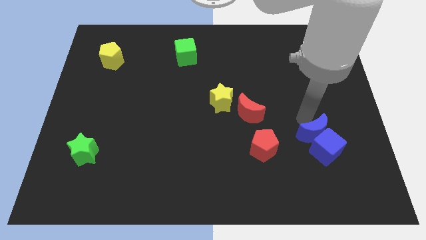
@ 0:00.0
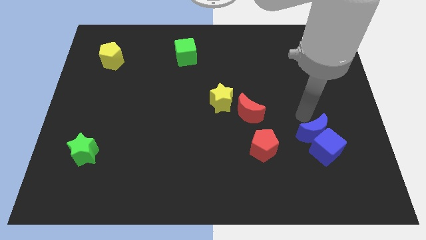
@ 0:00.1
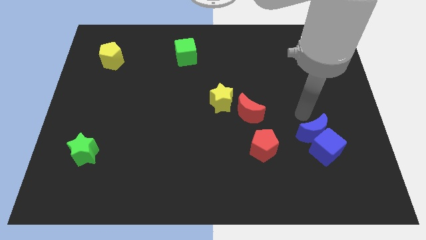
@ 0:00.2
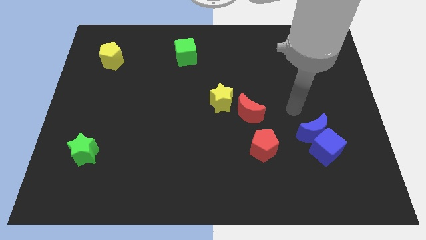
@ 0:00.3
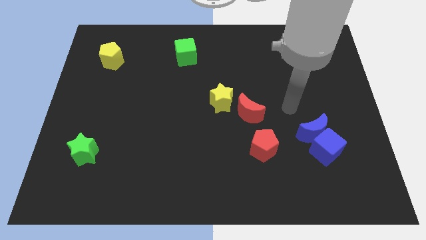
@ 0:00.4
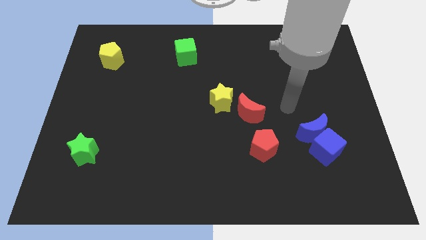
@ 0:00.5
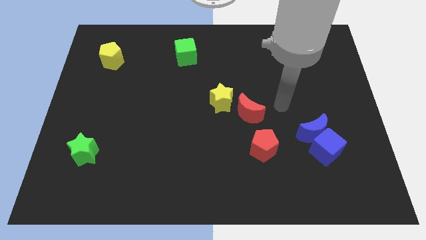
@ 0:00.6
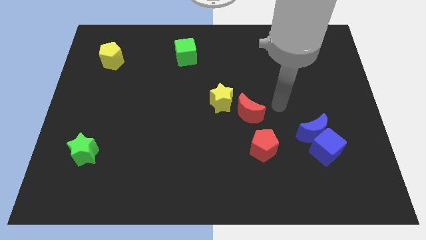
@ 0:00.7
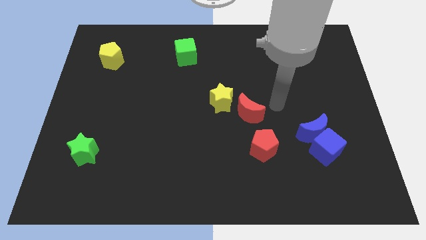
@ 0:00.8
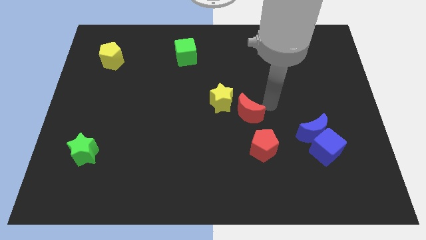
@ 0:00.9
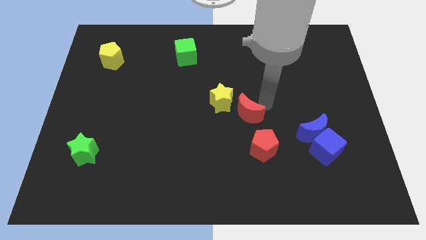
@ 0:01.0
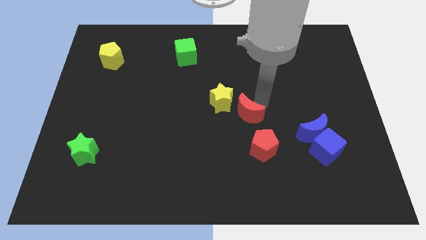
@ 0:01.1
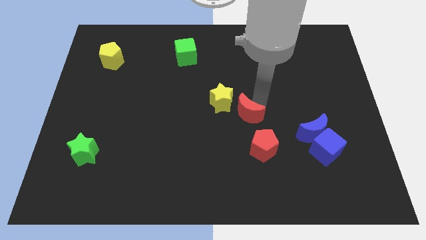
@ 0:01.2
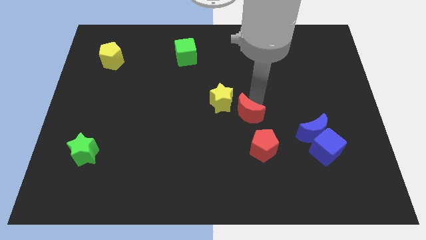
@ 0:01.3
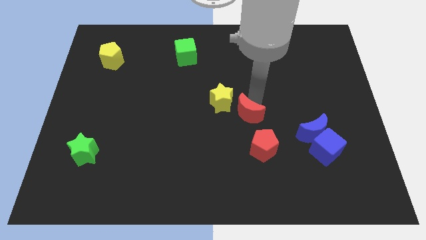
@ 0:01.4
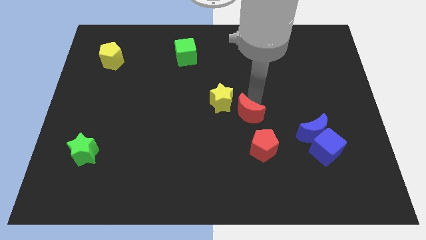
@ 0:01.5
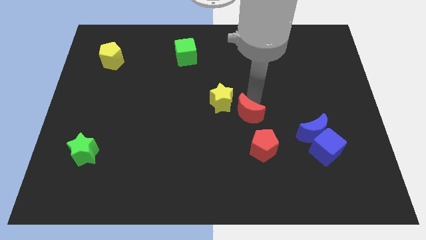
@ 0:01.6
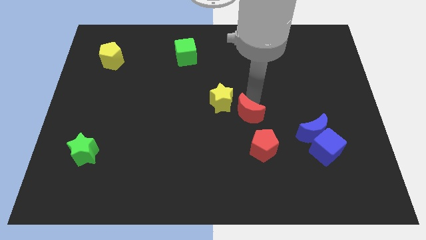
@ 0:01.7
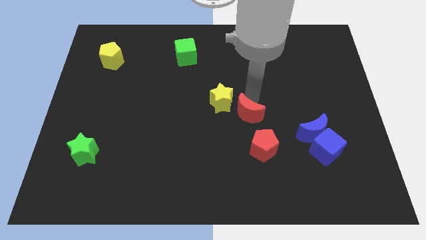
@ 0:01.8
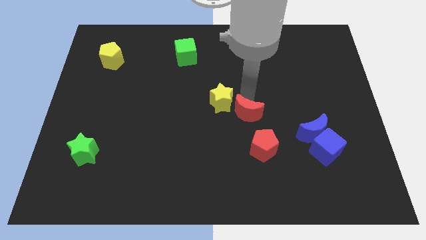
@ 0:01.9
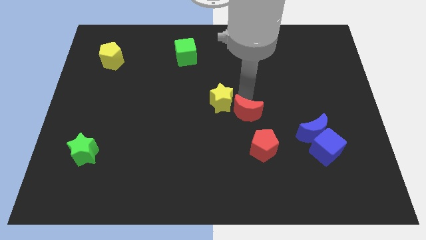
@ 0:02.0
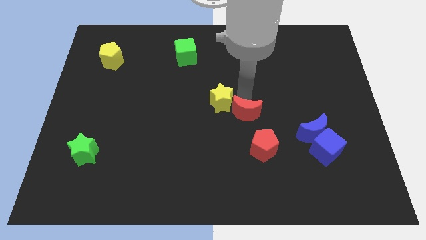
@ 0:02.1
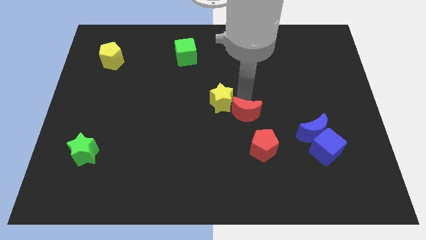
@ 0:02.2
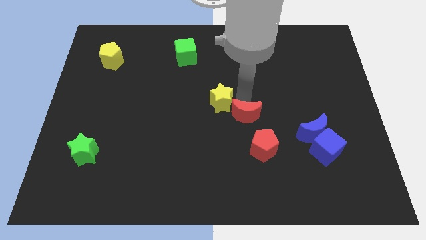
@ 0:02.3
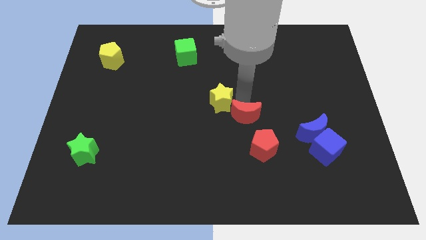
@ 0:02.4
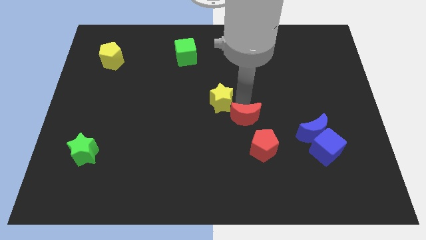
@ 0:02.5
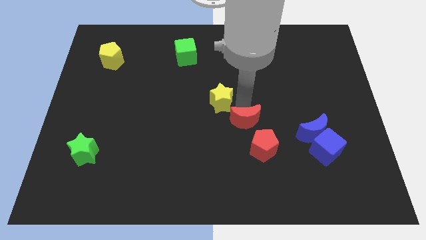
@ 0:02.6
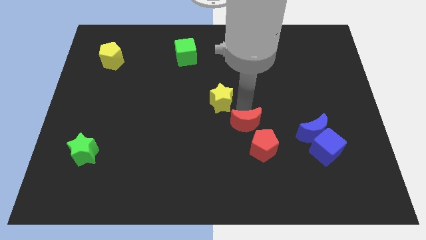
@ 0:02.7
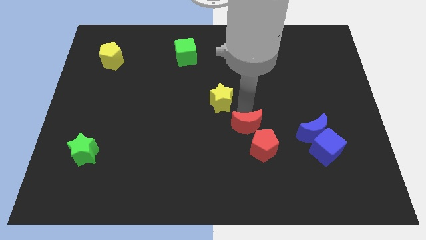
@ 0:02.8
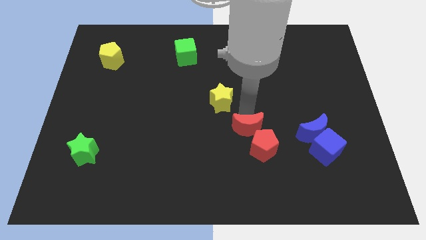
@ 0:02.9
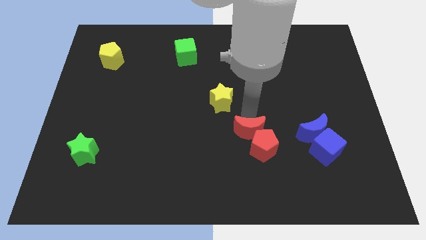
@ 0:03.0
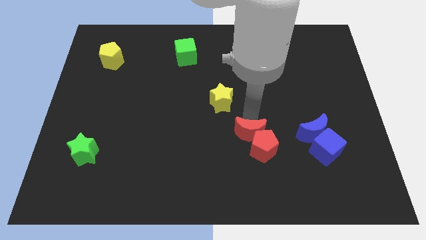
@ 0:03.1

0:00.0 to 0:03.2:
move the red moon into the red pentagon

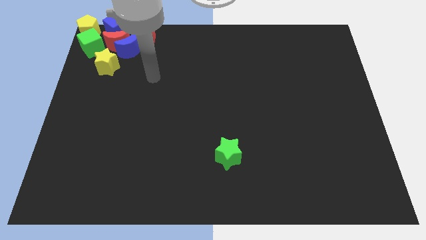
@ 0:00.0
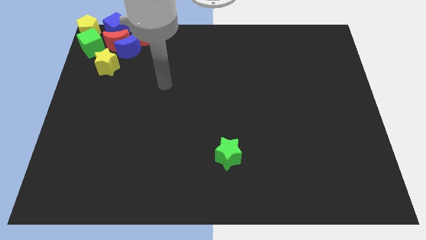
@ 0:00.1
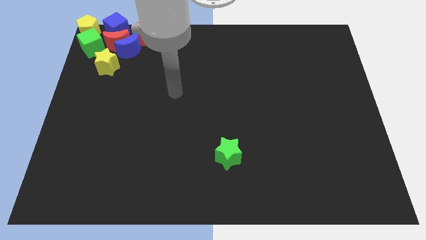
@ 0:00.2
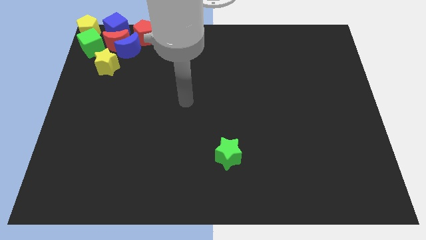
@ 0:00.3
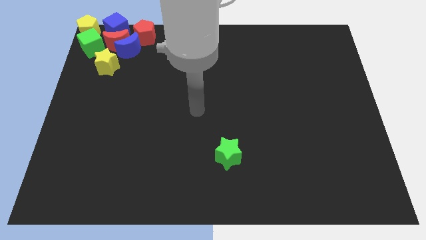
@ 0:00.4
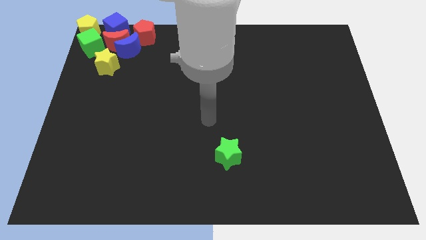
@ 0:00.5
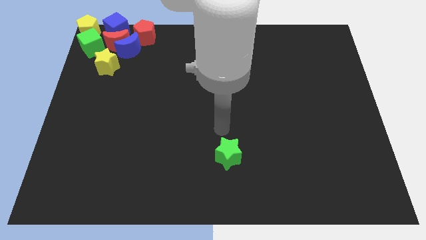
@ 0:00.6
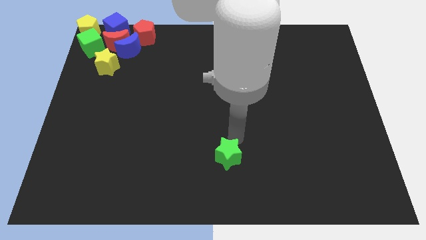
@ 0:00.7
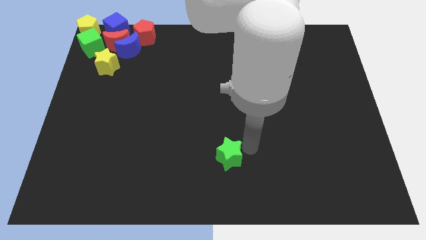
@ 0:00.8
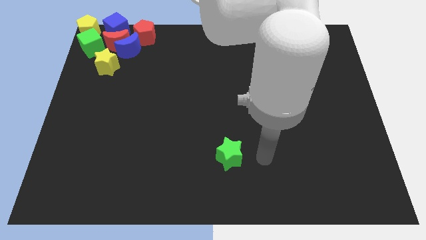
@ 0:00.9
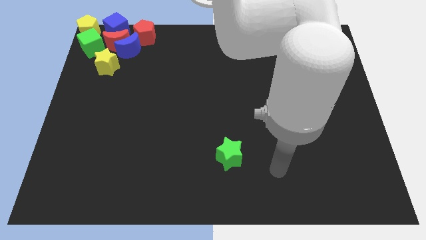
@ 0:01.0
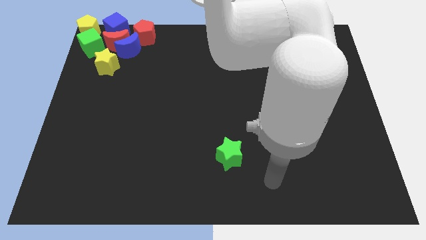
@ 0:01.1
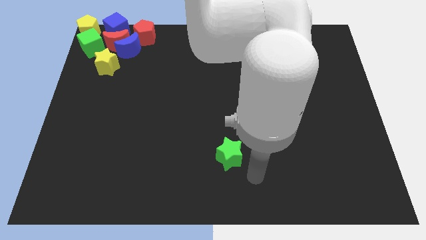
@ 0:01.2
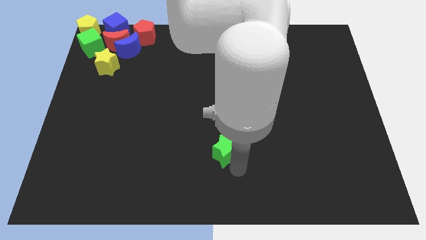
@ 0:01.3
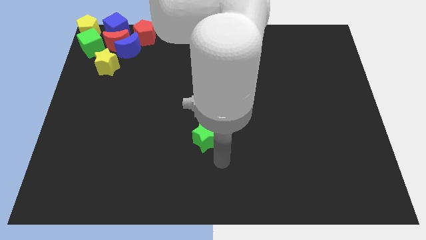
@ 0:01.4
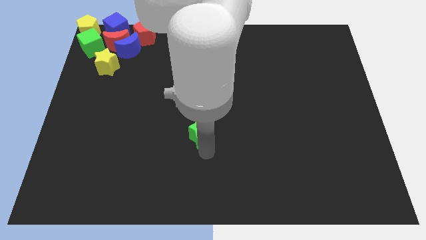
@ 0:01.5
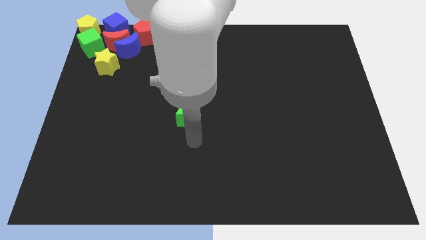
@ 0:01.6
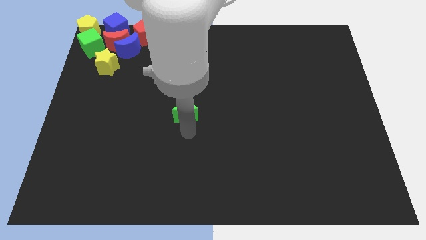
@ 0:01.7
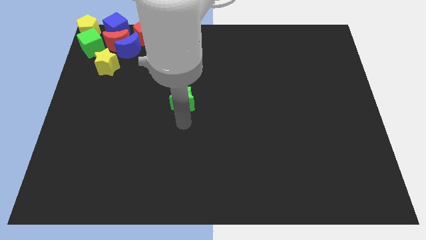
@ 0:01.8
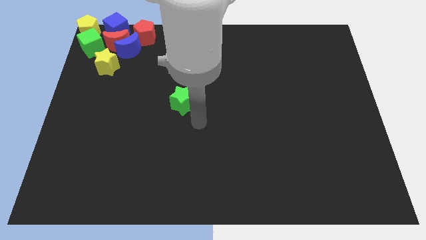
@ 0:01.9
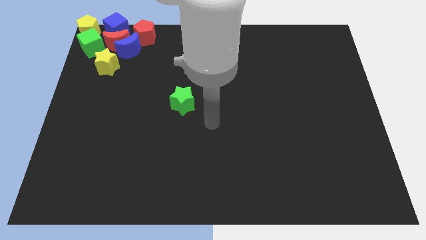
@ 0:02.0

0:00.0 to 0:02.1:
move green start to the middle of the board

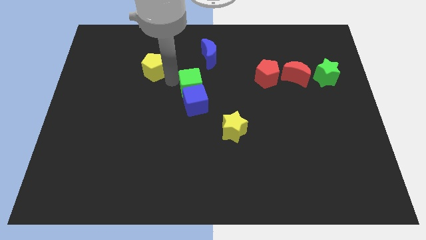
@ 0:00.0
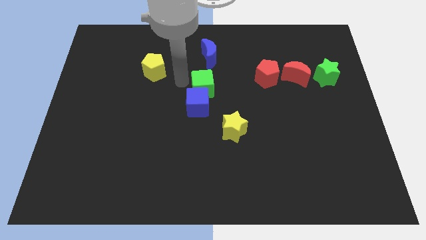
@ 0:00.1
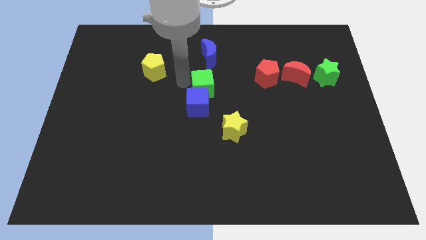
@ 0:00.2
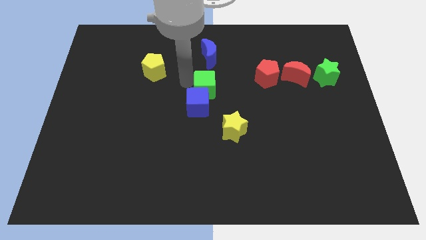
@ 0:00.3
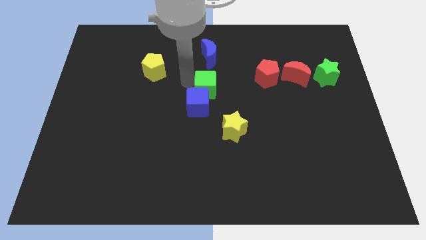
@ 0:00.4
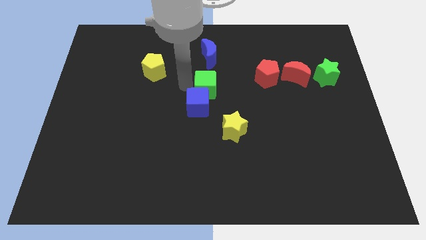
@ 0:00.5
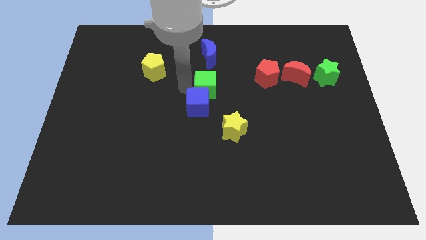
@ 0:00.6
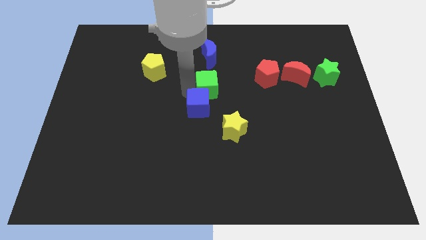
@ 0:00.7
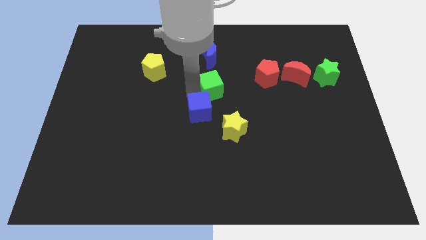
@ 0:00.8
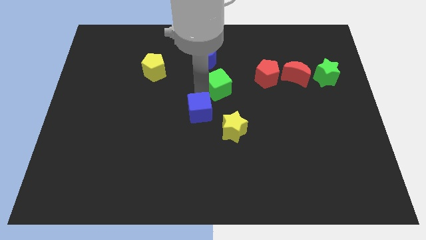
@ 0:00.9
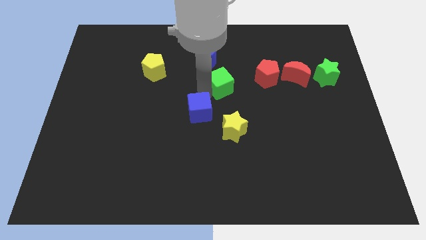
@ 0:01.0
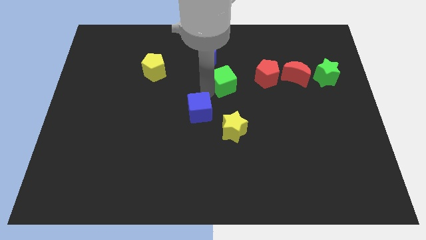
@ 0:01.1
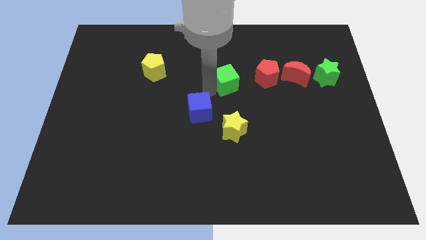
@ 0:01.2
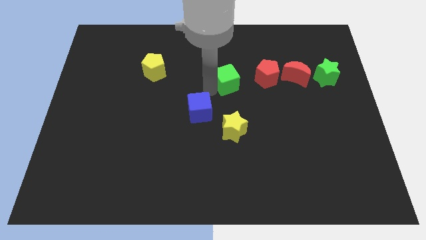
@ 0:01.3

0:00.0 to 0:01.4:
separate the green cube from blue cube

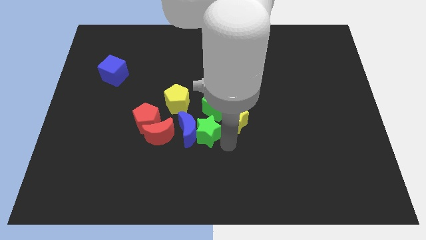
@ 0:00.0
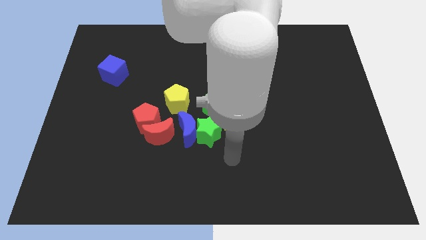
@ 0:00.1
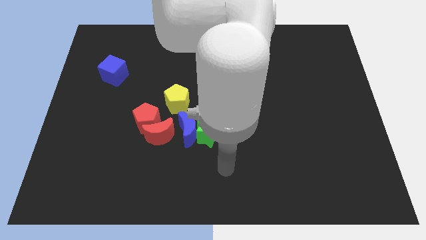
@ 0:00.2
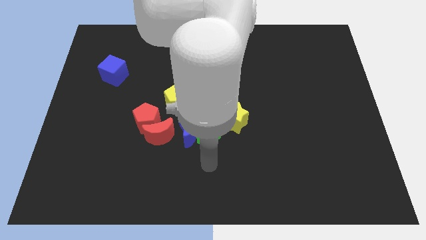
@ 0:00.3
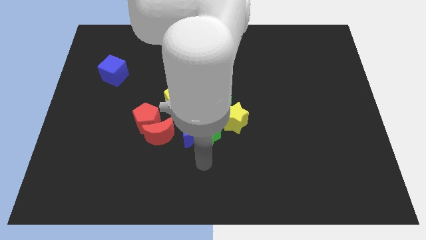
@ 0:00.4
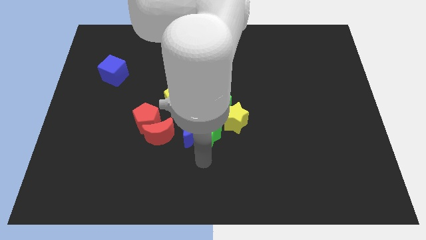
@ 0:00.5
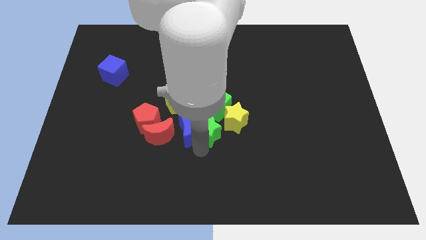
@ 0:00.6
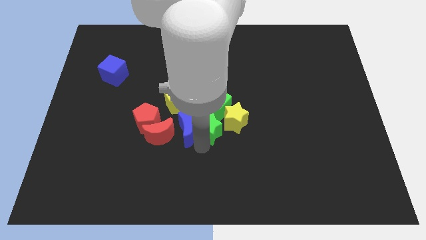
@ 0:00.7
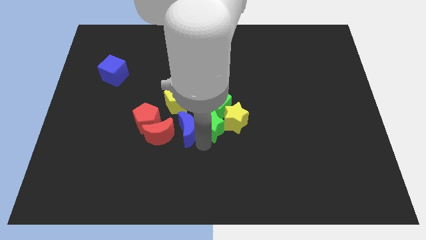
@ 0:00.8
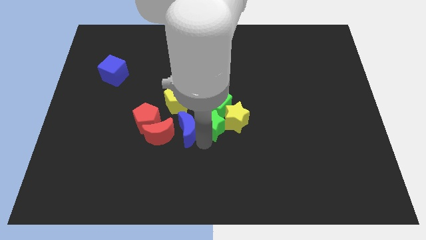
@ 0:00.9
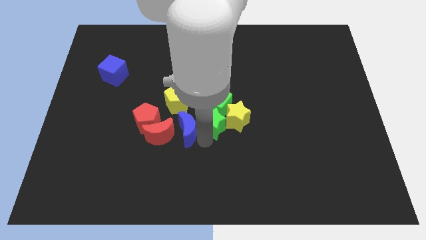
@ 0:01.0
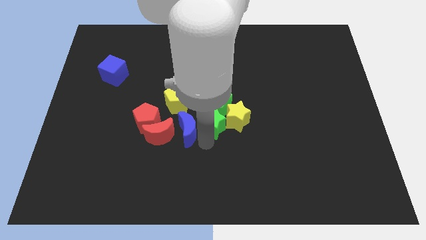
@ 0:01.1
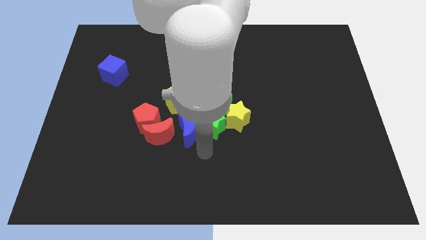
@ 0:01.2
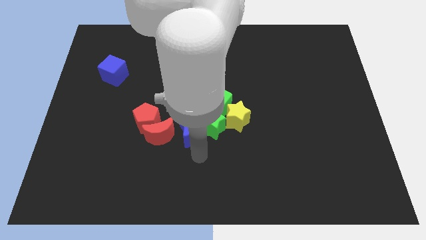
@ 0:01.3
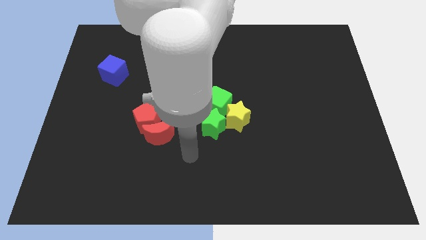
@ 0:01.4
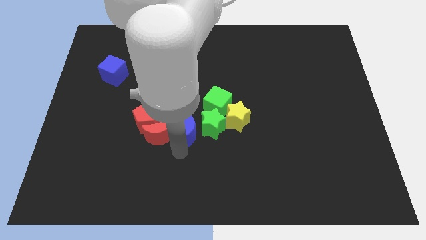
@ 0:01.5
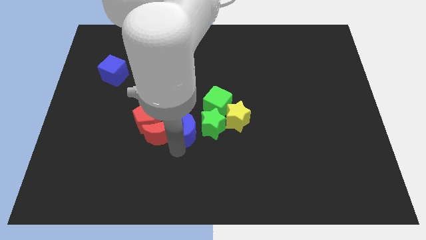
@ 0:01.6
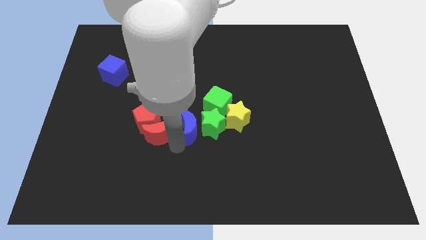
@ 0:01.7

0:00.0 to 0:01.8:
push the green star away from the blue moon

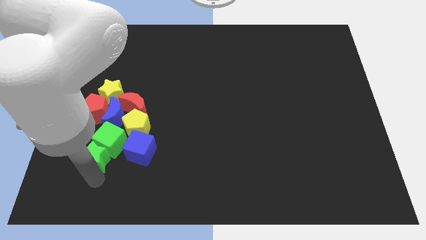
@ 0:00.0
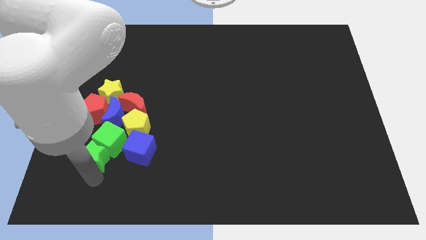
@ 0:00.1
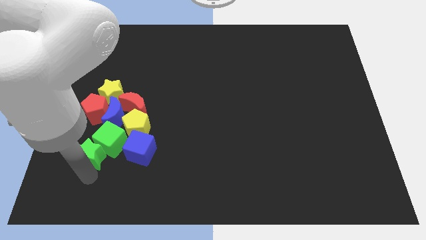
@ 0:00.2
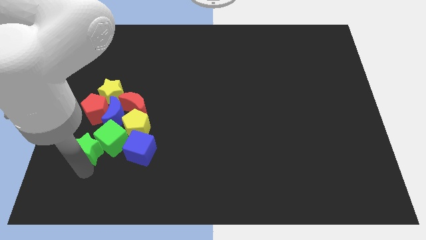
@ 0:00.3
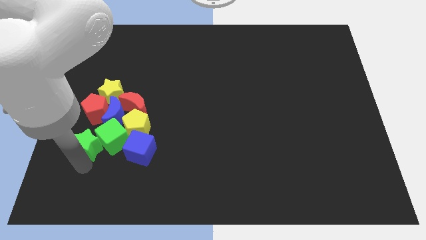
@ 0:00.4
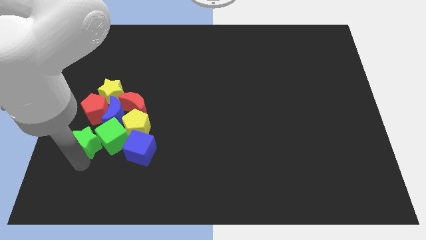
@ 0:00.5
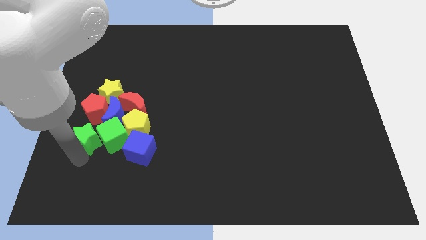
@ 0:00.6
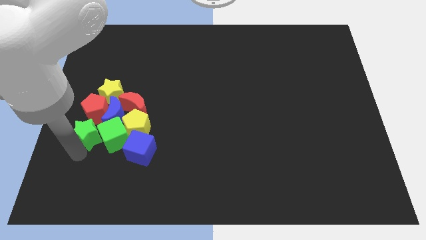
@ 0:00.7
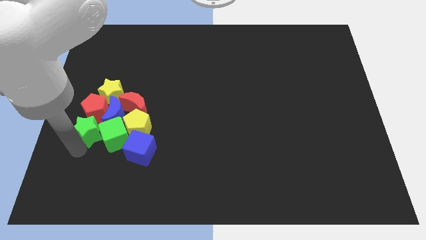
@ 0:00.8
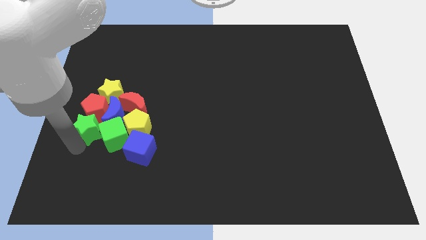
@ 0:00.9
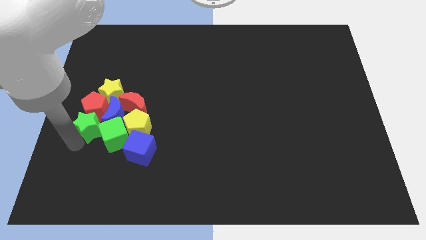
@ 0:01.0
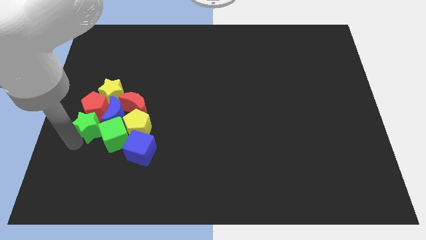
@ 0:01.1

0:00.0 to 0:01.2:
push the green star under the red pentagon
